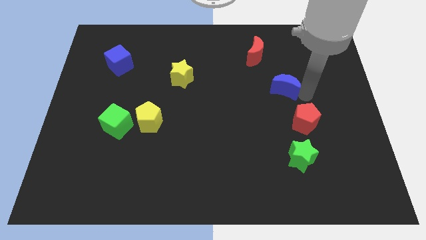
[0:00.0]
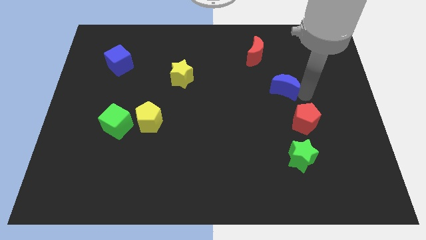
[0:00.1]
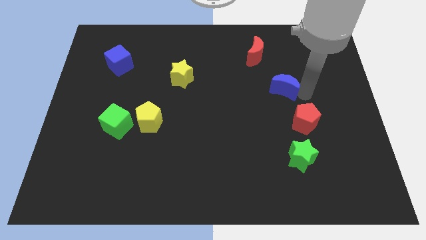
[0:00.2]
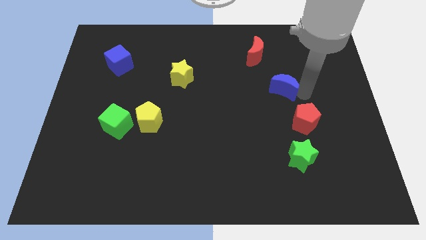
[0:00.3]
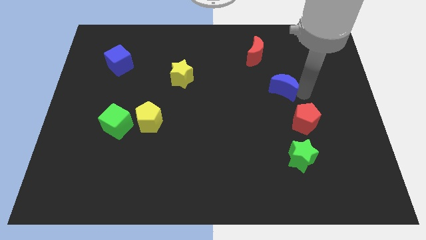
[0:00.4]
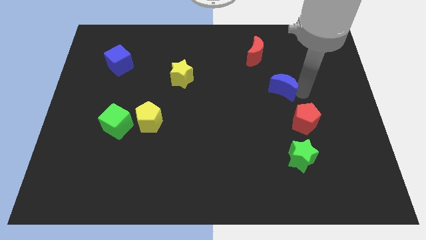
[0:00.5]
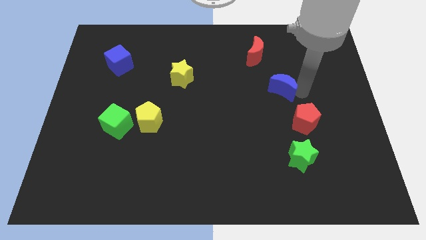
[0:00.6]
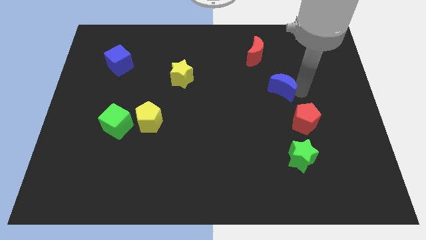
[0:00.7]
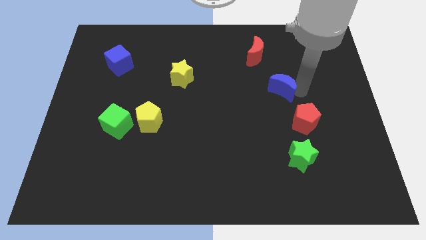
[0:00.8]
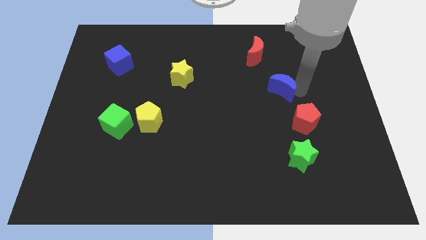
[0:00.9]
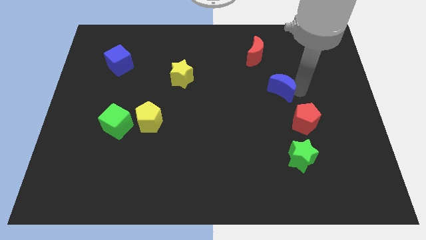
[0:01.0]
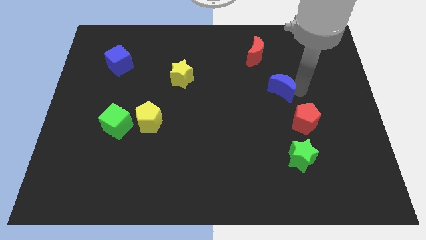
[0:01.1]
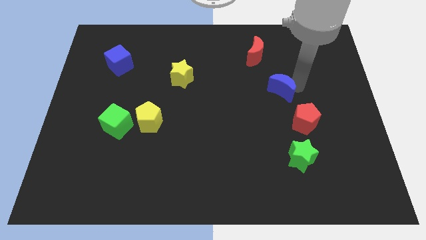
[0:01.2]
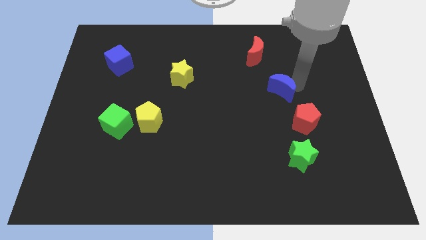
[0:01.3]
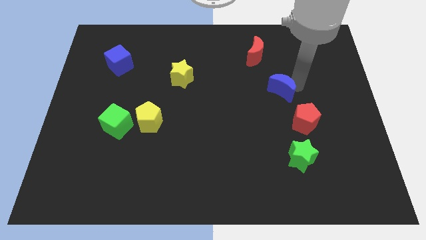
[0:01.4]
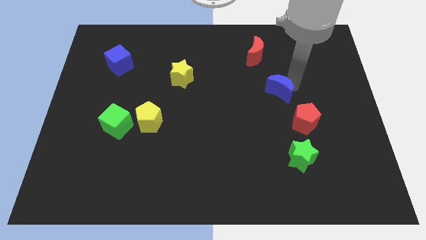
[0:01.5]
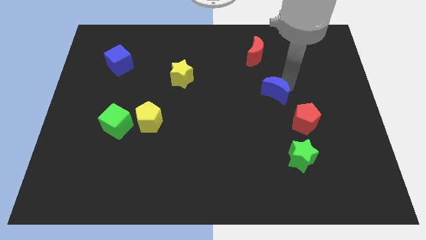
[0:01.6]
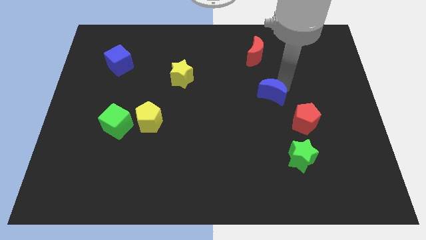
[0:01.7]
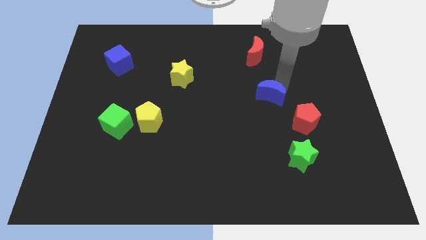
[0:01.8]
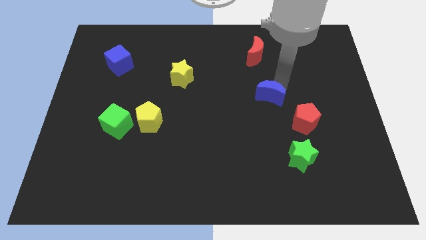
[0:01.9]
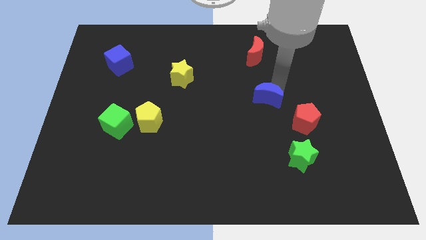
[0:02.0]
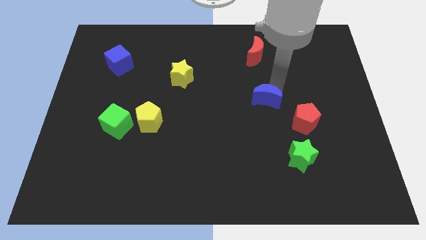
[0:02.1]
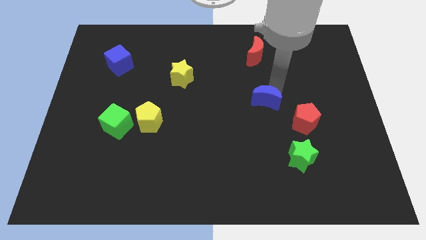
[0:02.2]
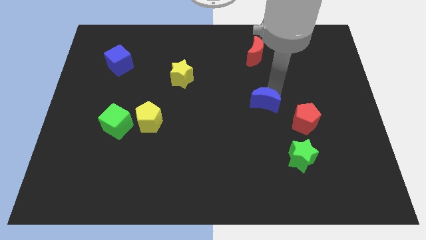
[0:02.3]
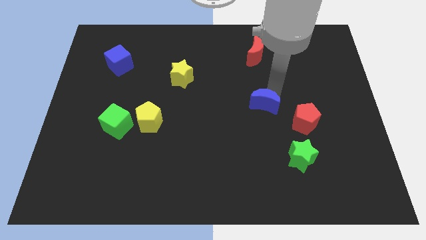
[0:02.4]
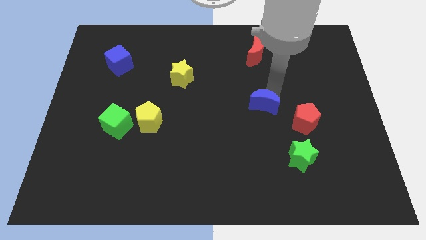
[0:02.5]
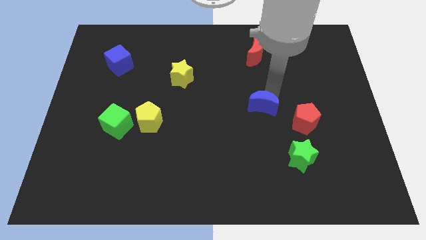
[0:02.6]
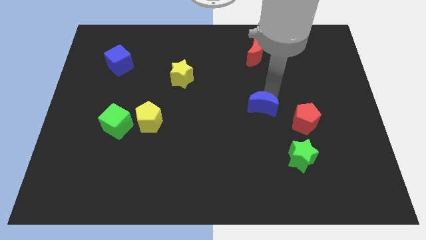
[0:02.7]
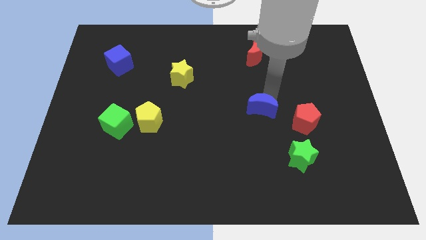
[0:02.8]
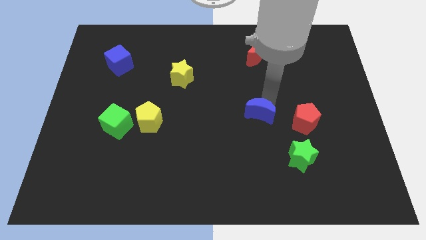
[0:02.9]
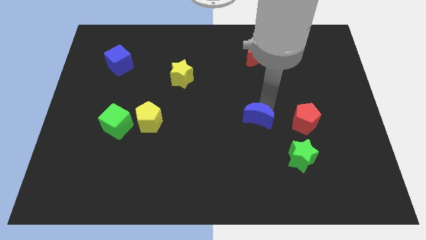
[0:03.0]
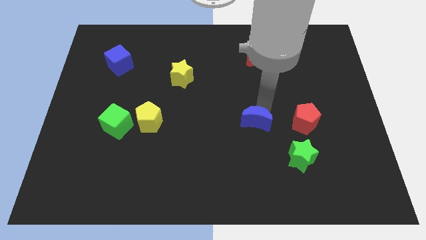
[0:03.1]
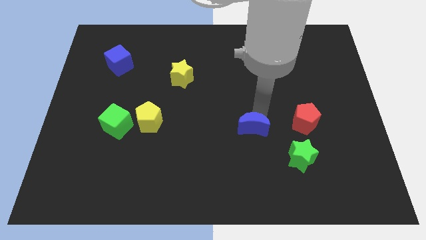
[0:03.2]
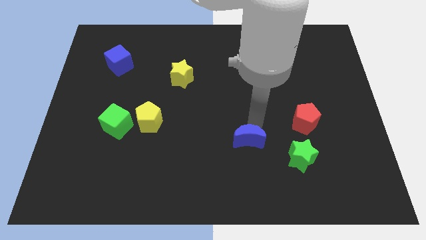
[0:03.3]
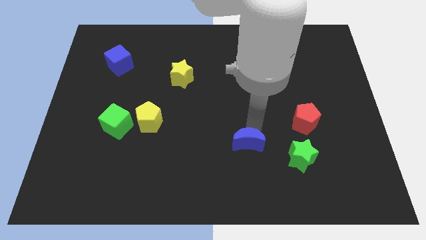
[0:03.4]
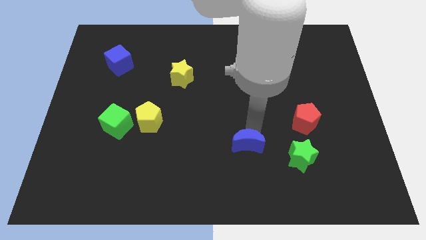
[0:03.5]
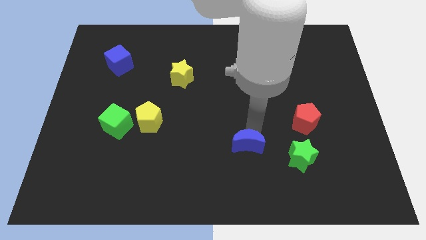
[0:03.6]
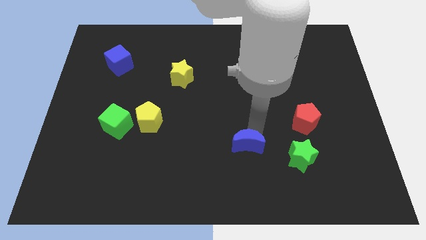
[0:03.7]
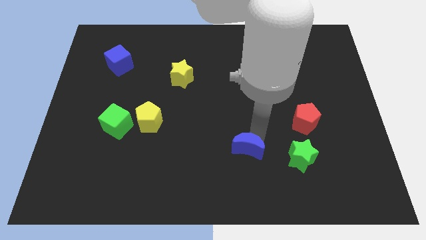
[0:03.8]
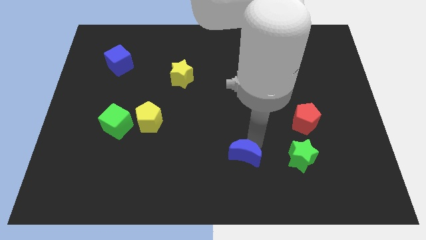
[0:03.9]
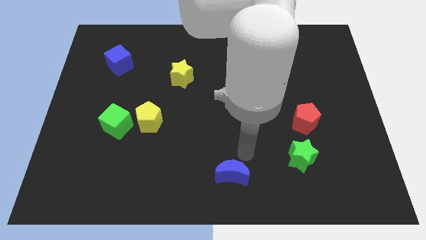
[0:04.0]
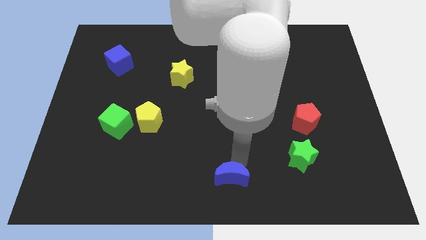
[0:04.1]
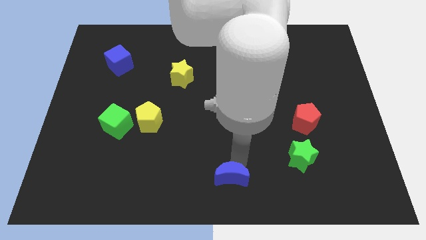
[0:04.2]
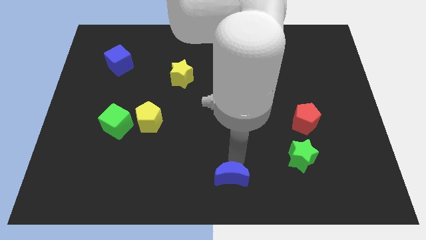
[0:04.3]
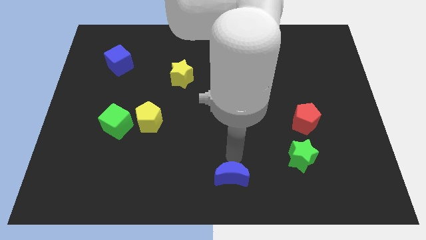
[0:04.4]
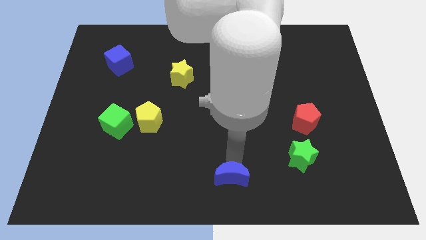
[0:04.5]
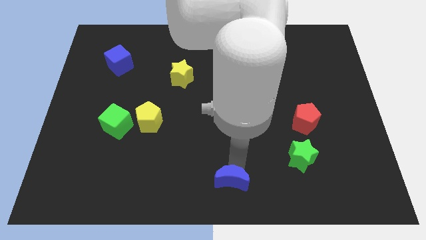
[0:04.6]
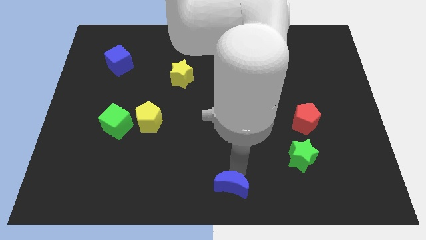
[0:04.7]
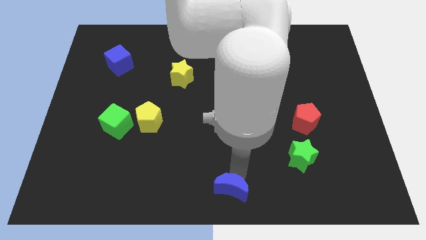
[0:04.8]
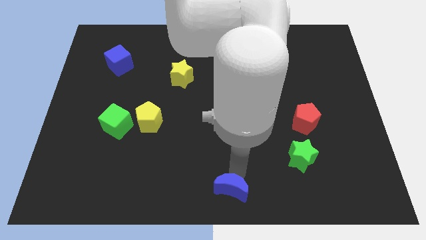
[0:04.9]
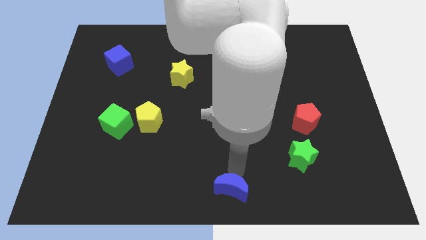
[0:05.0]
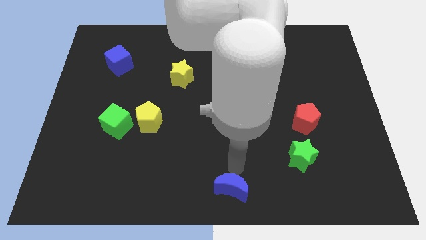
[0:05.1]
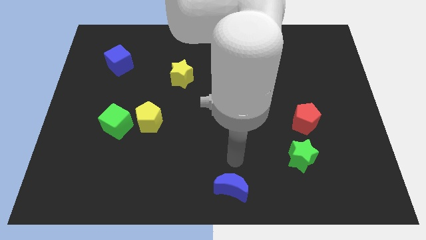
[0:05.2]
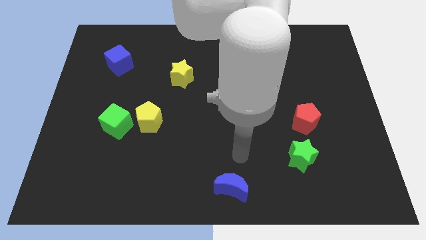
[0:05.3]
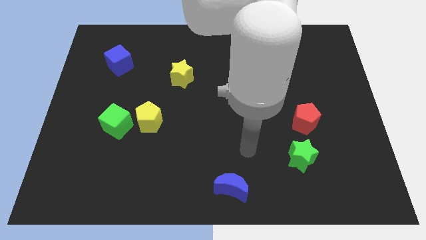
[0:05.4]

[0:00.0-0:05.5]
push the blue crescent to the bottom center of the board

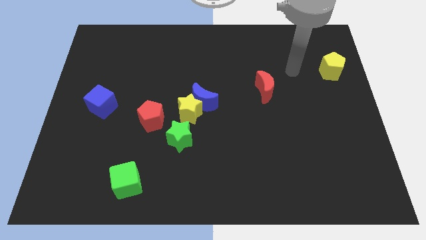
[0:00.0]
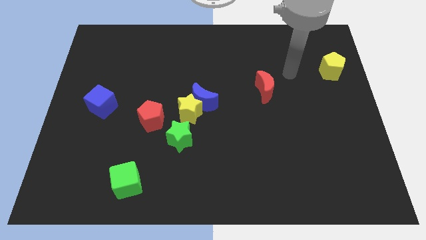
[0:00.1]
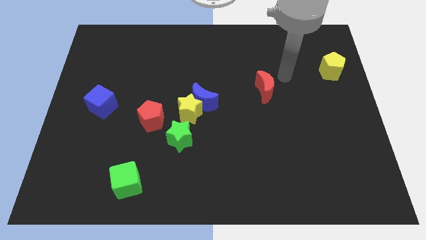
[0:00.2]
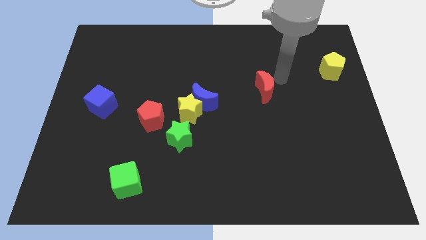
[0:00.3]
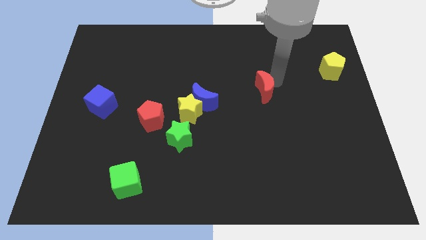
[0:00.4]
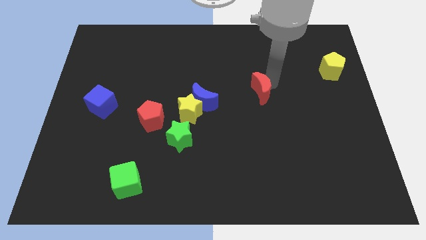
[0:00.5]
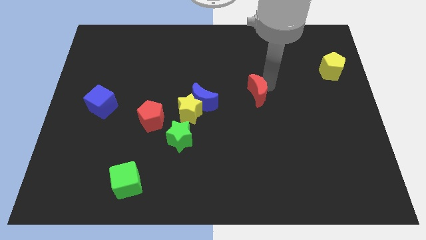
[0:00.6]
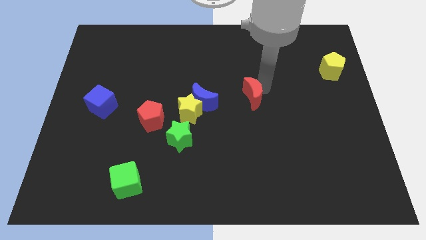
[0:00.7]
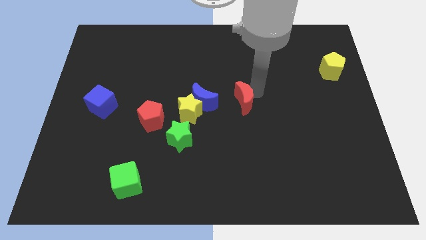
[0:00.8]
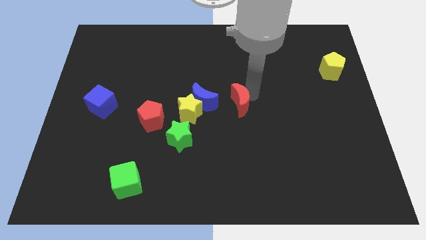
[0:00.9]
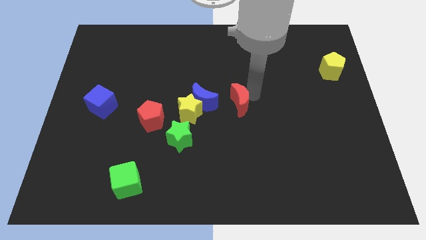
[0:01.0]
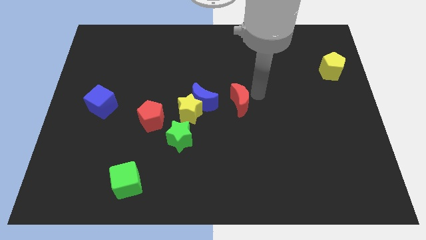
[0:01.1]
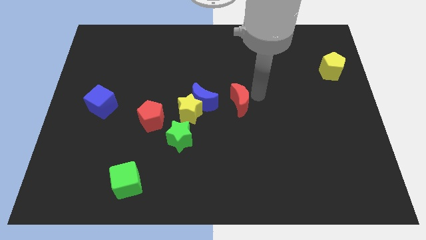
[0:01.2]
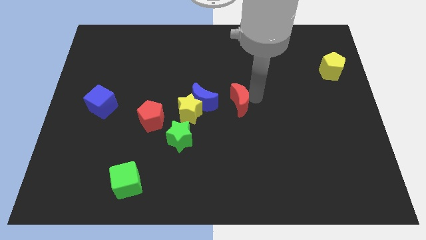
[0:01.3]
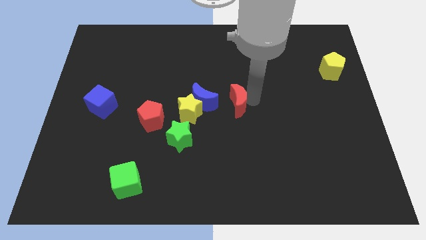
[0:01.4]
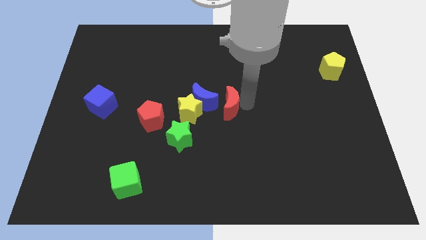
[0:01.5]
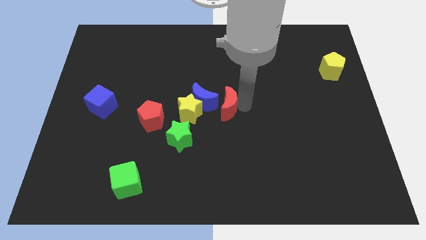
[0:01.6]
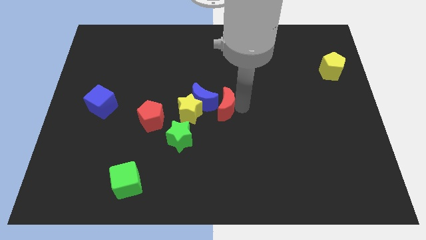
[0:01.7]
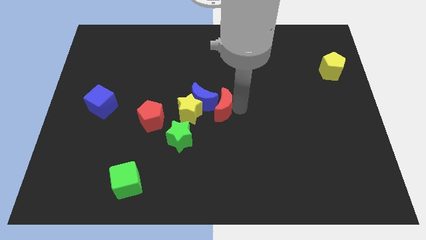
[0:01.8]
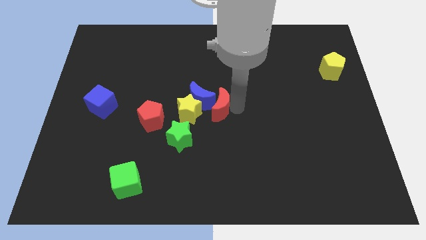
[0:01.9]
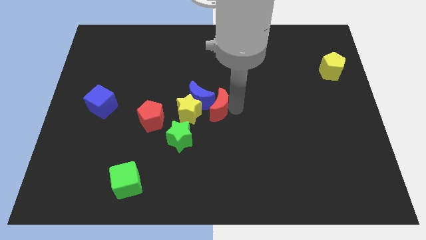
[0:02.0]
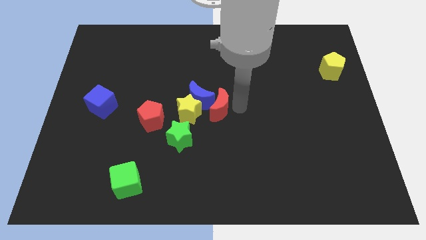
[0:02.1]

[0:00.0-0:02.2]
move the red moon to the right of the blue moon

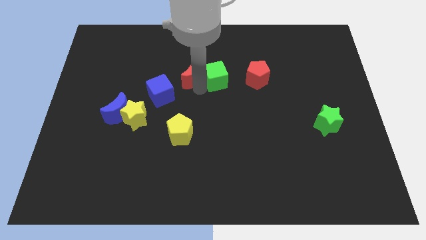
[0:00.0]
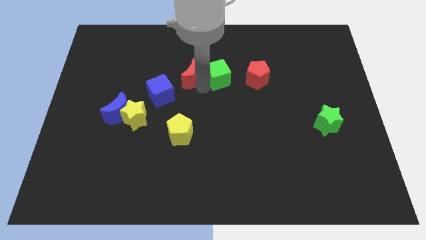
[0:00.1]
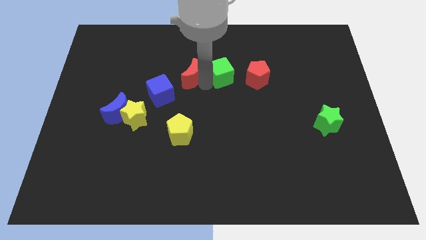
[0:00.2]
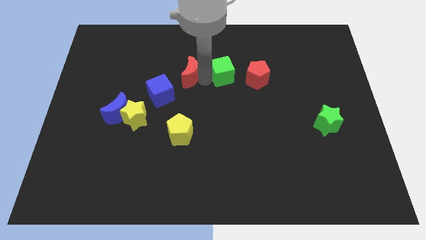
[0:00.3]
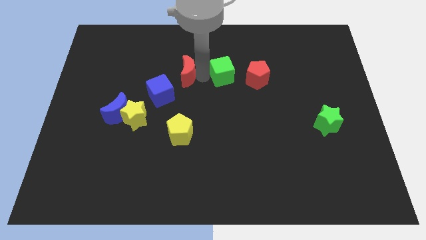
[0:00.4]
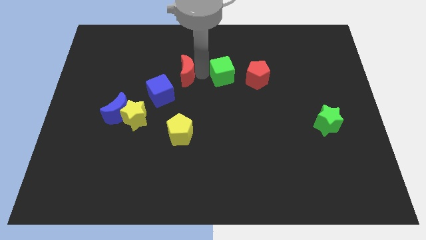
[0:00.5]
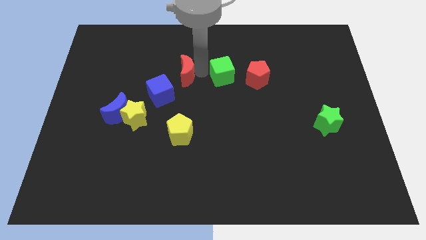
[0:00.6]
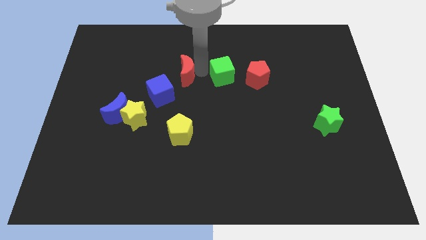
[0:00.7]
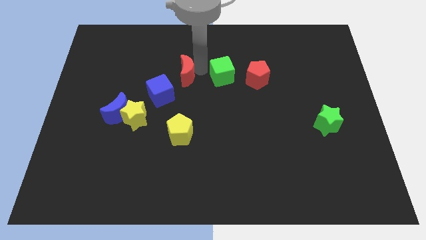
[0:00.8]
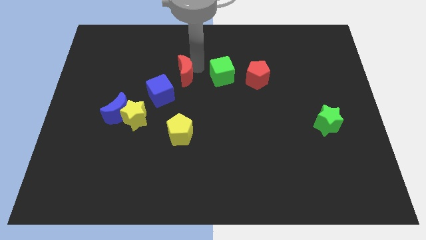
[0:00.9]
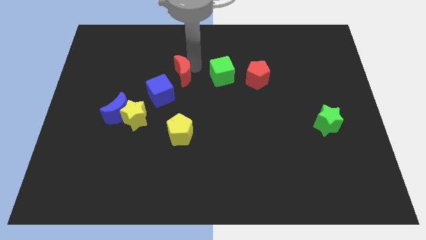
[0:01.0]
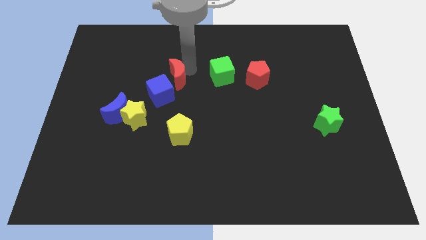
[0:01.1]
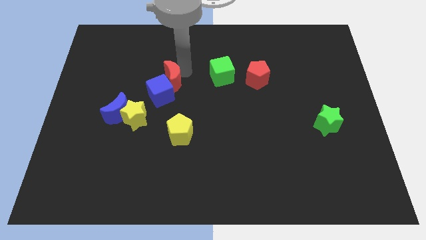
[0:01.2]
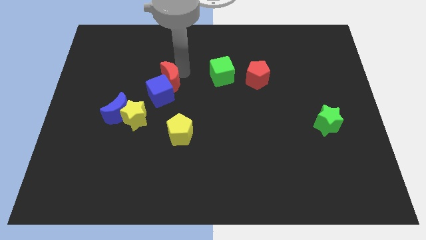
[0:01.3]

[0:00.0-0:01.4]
move the red crescent into the blue cube
